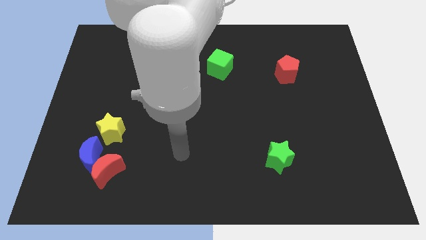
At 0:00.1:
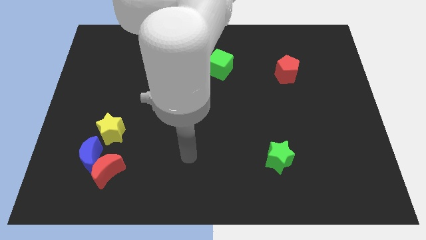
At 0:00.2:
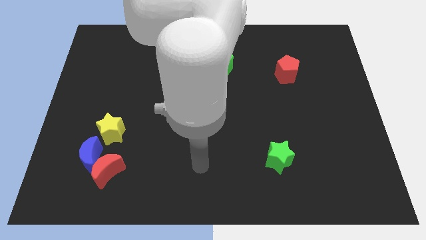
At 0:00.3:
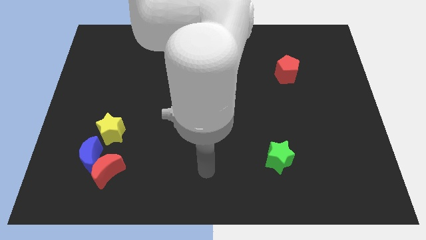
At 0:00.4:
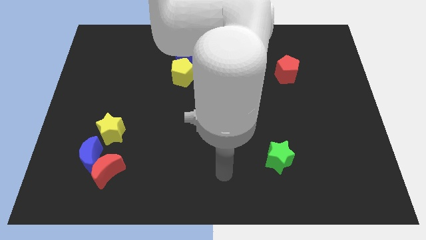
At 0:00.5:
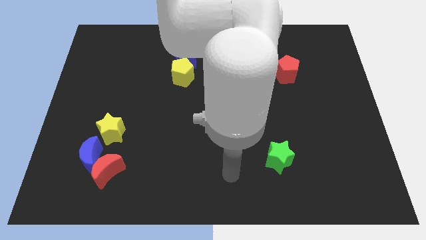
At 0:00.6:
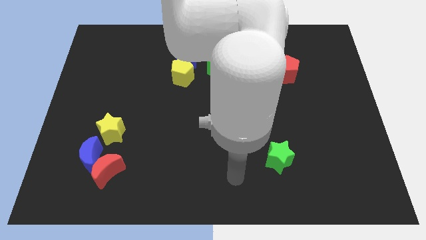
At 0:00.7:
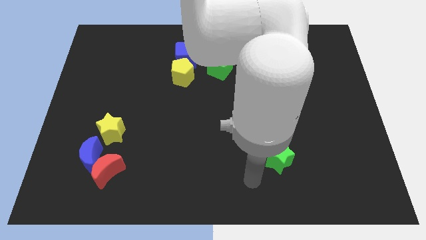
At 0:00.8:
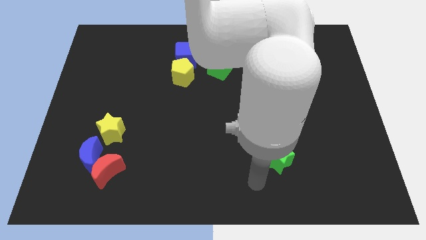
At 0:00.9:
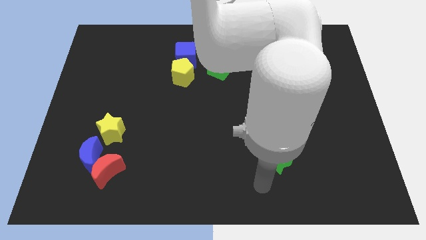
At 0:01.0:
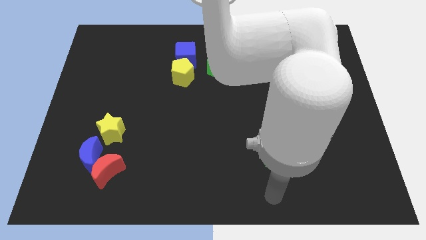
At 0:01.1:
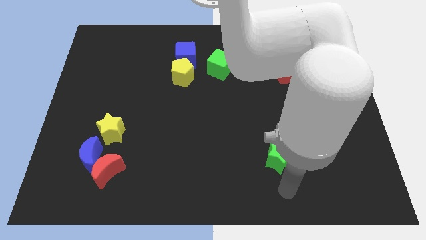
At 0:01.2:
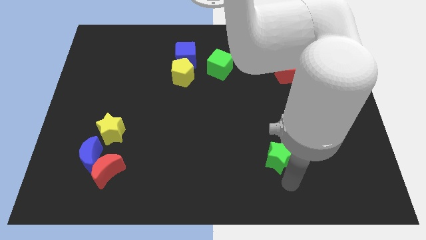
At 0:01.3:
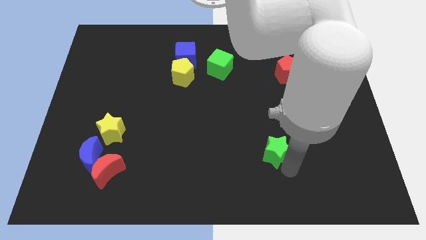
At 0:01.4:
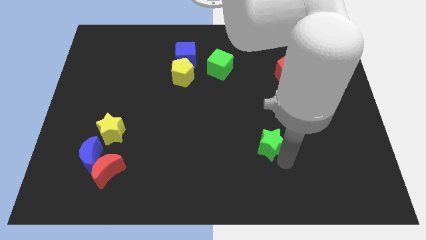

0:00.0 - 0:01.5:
push the green star slightly to the top side of the board

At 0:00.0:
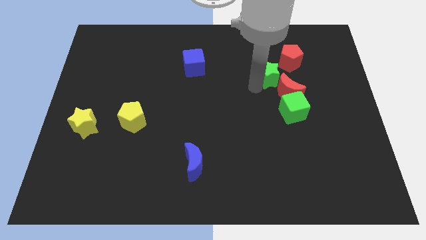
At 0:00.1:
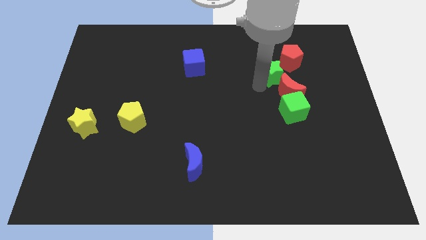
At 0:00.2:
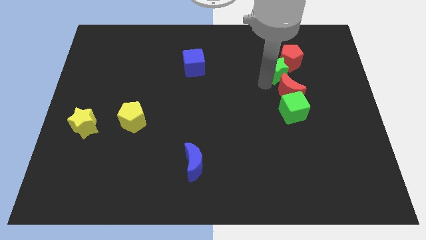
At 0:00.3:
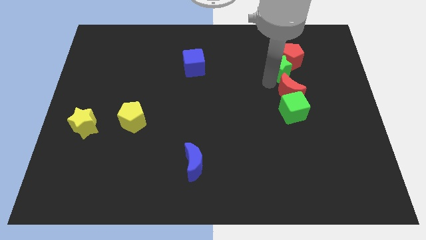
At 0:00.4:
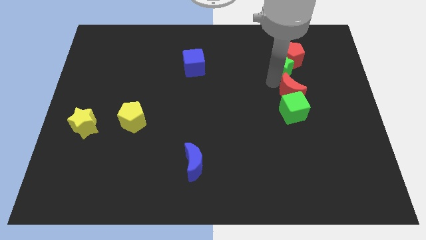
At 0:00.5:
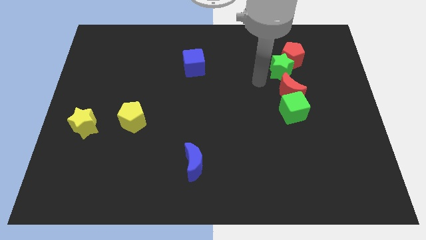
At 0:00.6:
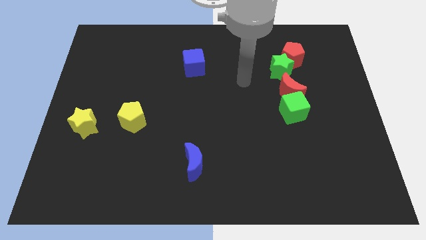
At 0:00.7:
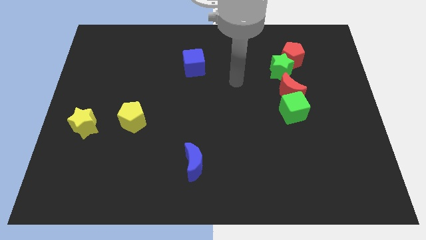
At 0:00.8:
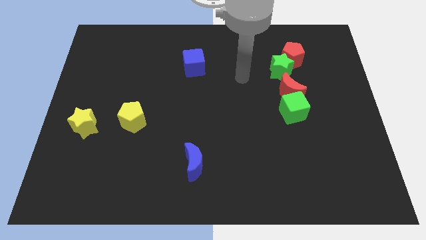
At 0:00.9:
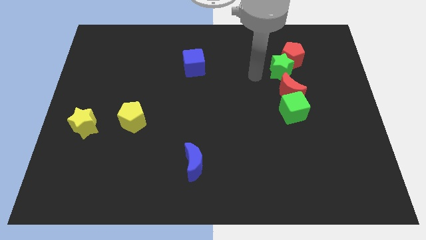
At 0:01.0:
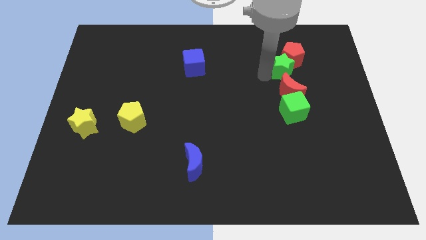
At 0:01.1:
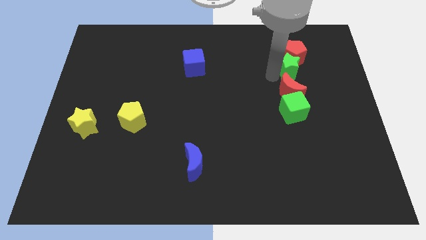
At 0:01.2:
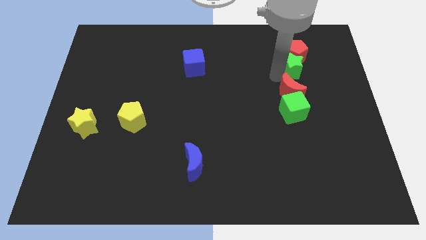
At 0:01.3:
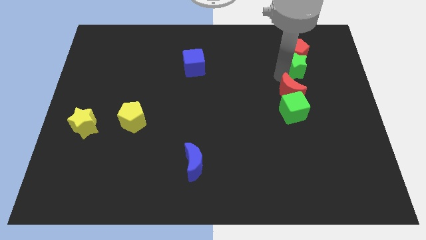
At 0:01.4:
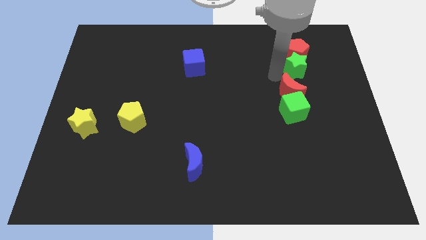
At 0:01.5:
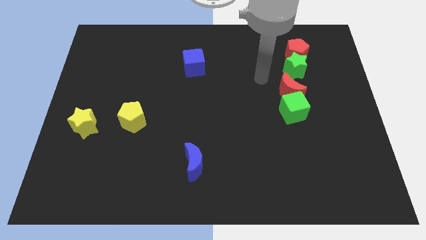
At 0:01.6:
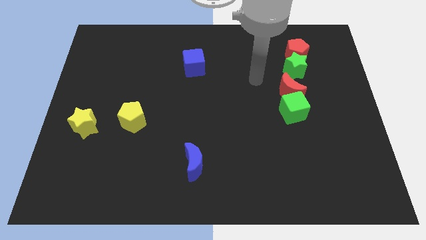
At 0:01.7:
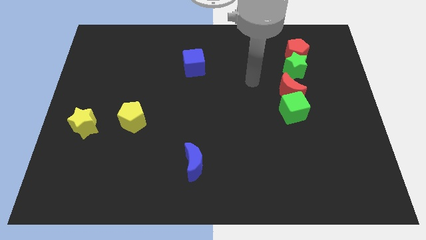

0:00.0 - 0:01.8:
push the green star into the red pentagon

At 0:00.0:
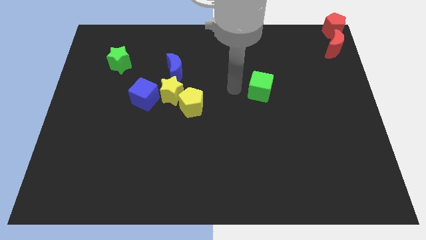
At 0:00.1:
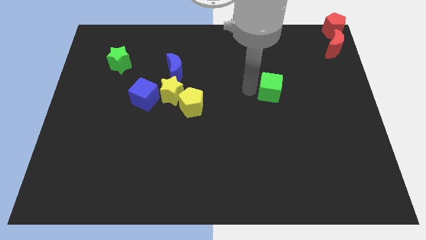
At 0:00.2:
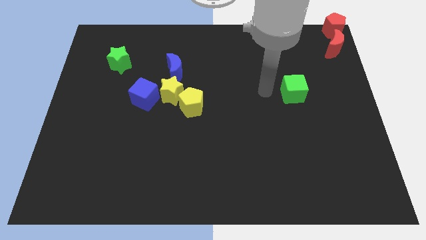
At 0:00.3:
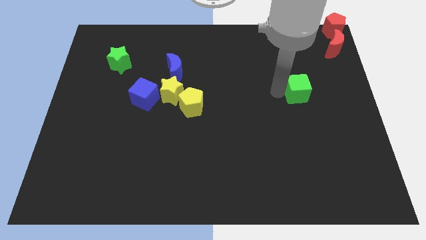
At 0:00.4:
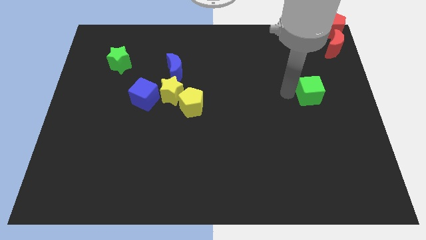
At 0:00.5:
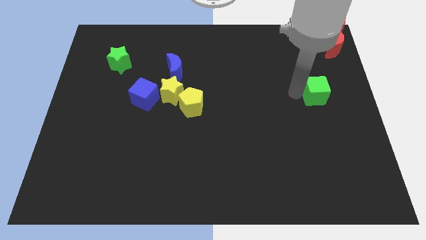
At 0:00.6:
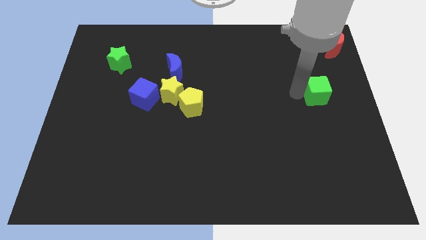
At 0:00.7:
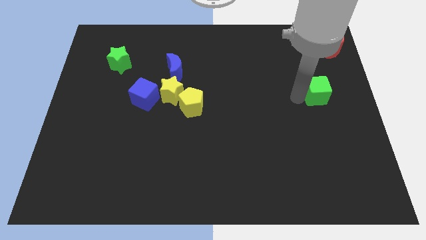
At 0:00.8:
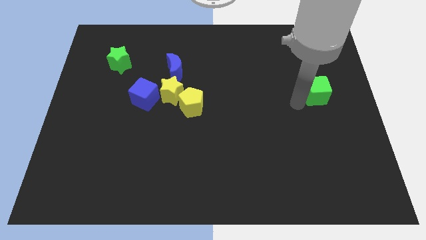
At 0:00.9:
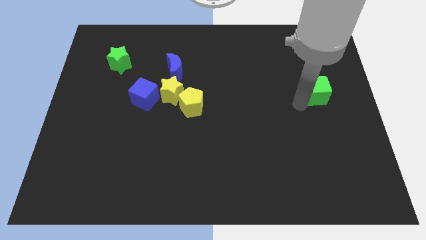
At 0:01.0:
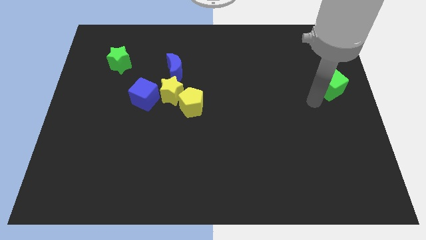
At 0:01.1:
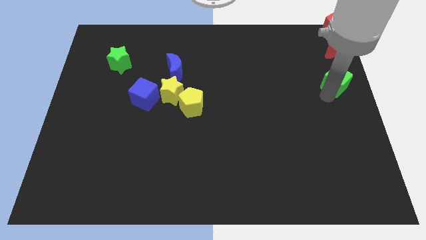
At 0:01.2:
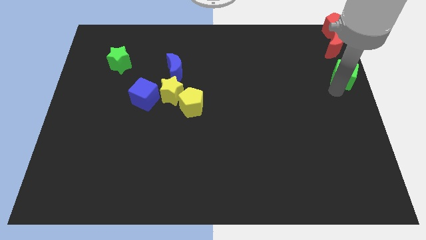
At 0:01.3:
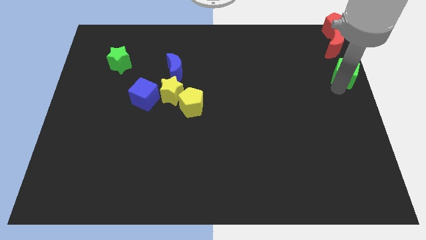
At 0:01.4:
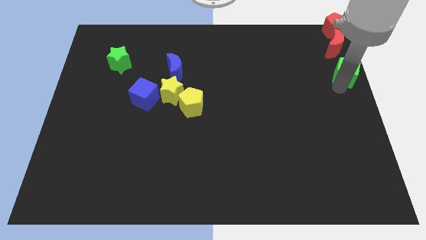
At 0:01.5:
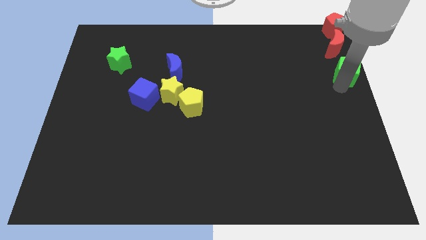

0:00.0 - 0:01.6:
place the green cube below the red moon

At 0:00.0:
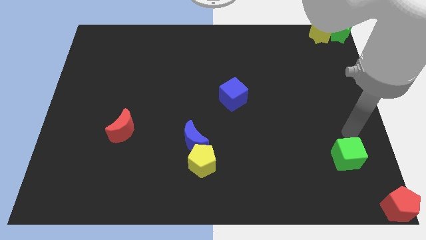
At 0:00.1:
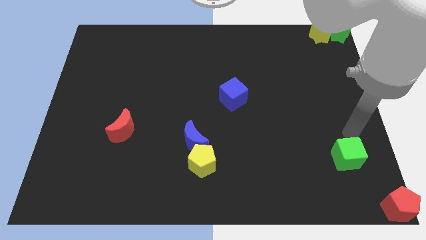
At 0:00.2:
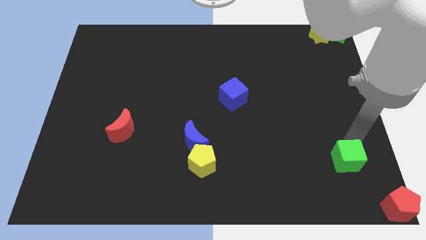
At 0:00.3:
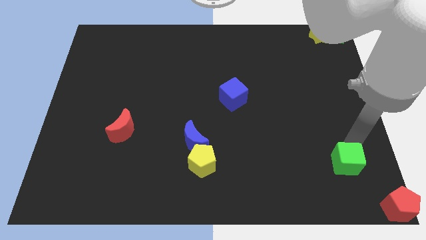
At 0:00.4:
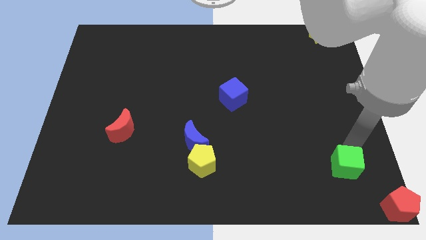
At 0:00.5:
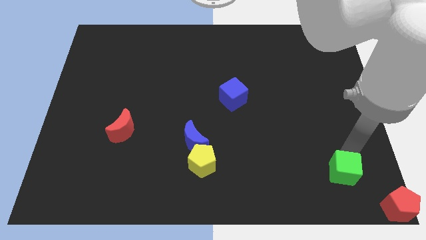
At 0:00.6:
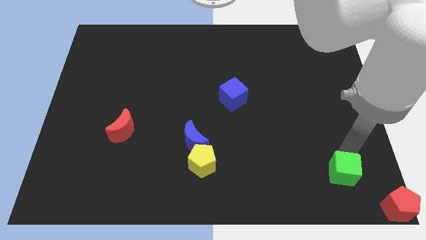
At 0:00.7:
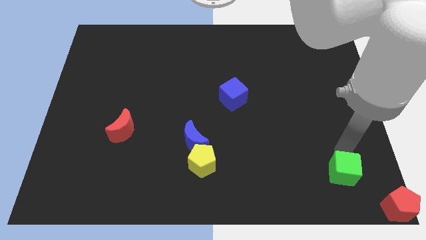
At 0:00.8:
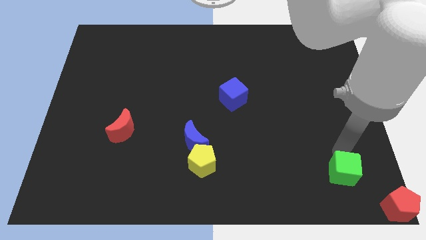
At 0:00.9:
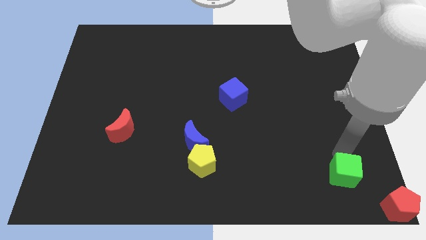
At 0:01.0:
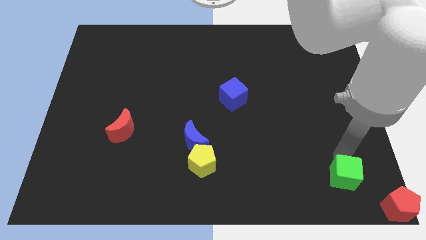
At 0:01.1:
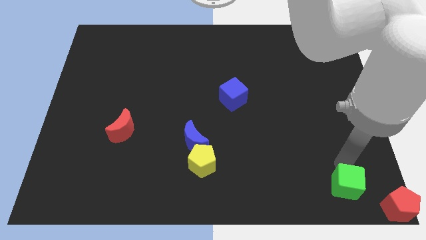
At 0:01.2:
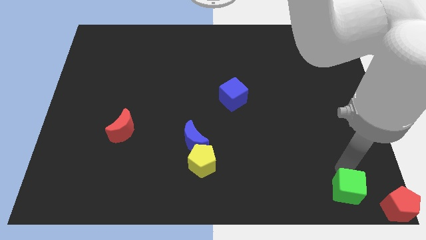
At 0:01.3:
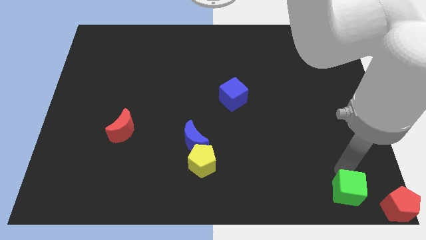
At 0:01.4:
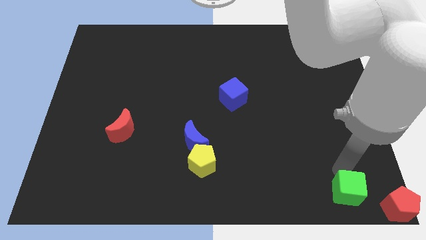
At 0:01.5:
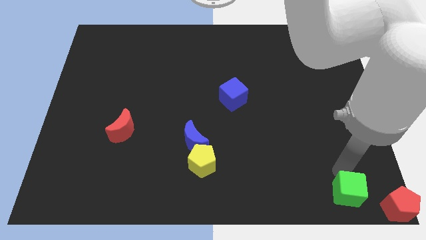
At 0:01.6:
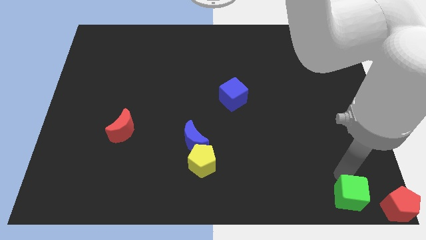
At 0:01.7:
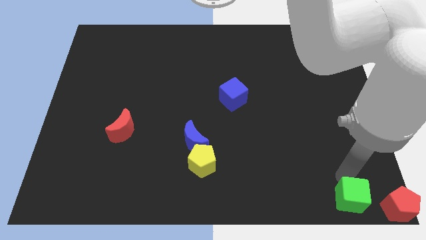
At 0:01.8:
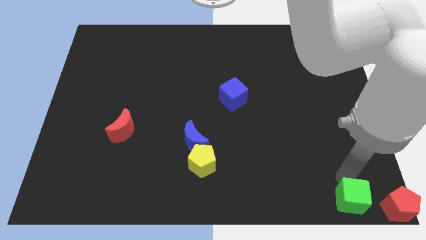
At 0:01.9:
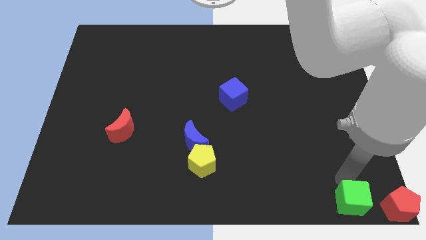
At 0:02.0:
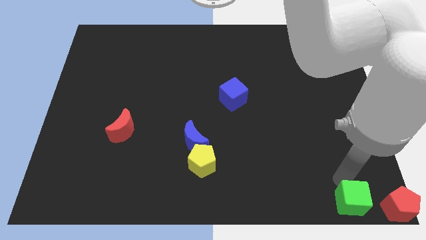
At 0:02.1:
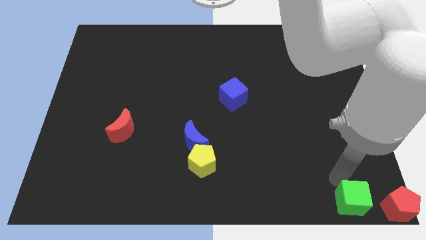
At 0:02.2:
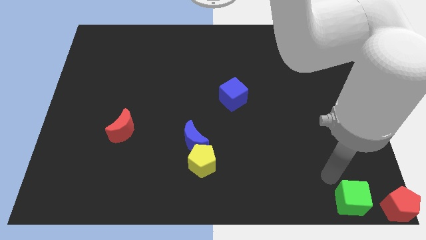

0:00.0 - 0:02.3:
put the green square to the left side of the red pentagon

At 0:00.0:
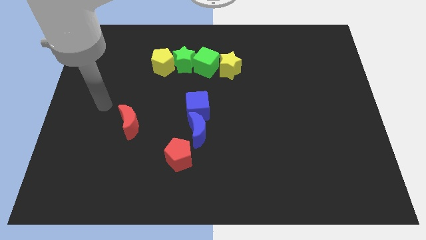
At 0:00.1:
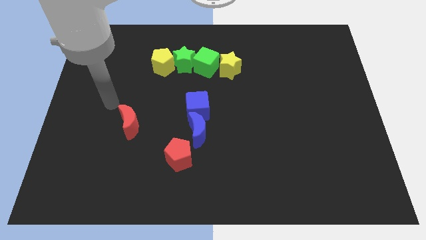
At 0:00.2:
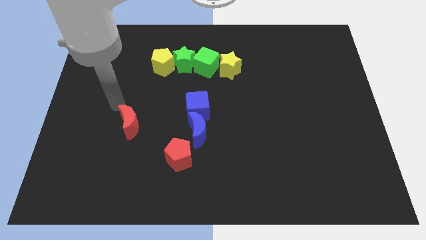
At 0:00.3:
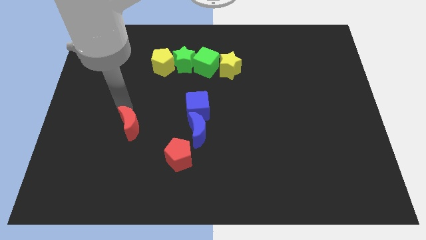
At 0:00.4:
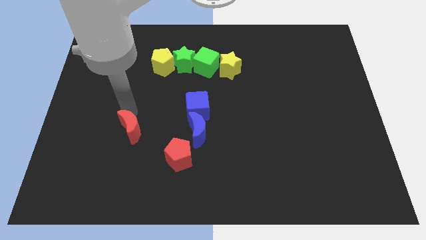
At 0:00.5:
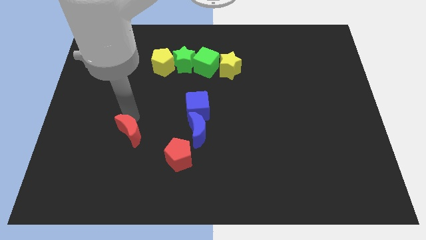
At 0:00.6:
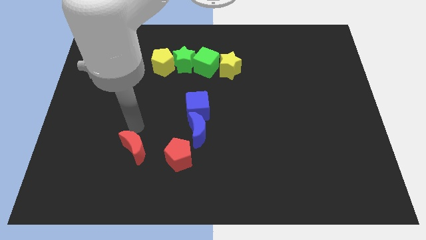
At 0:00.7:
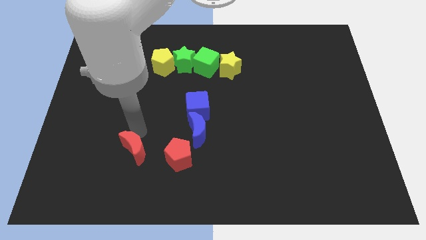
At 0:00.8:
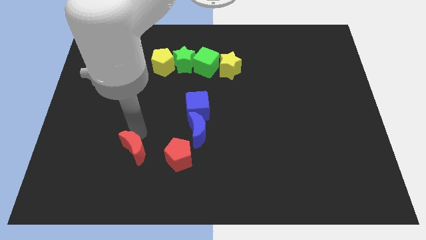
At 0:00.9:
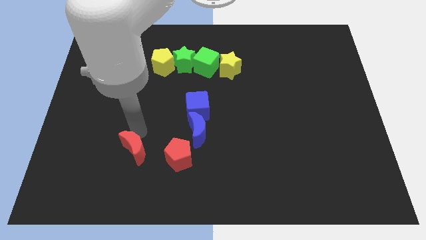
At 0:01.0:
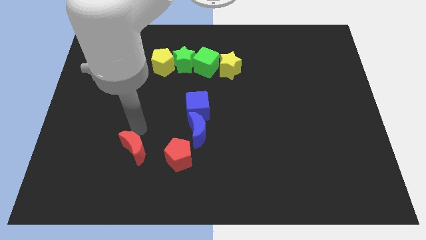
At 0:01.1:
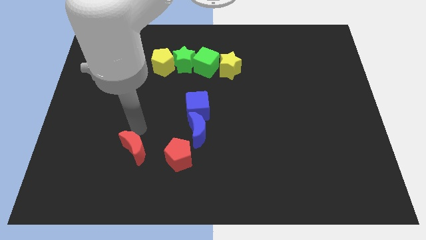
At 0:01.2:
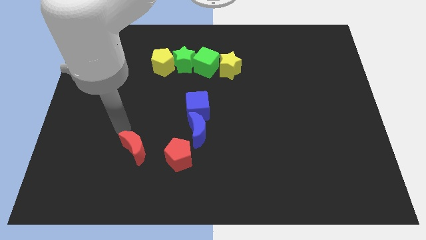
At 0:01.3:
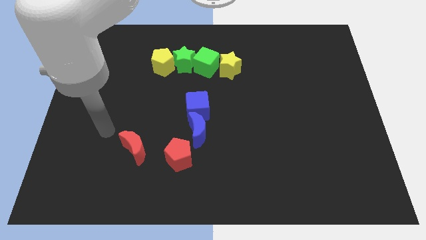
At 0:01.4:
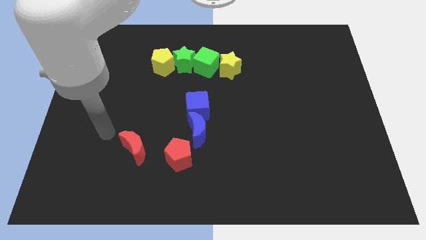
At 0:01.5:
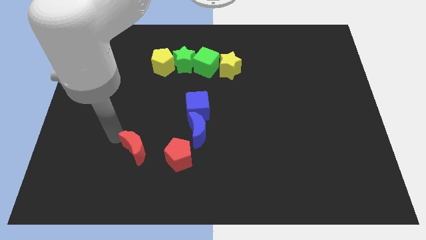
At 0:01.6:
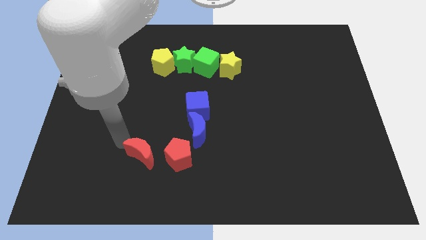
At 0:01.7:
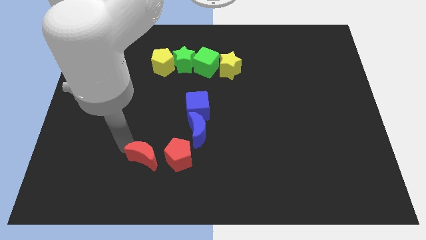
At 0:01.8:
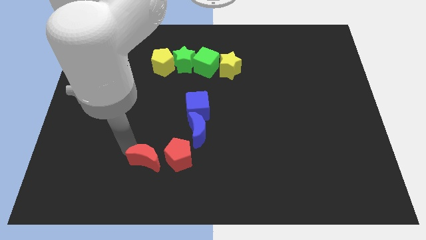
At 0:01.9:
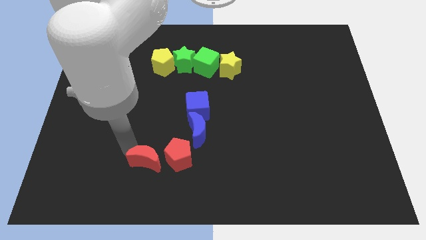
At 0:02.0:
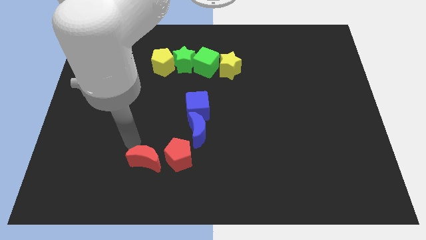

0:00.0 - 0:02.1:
move the red crescent left to the red pentagon
